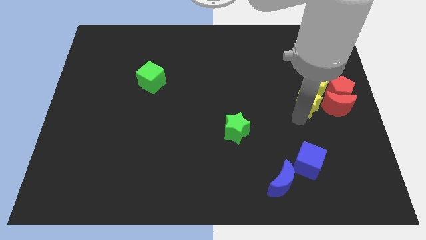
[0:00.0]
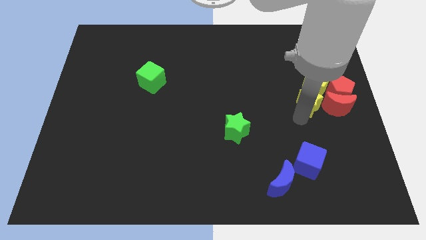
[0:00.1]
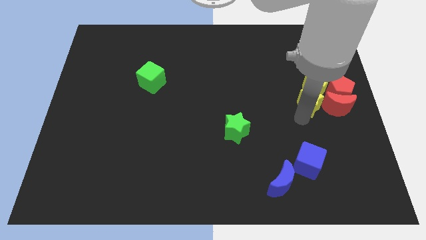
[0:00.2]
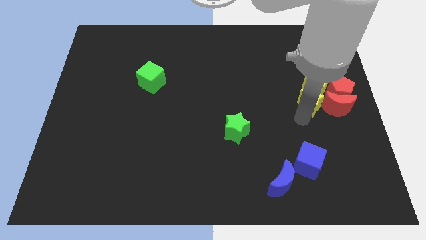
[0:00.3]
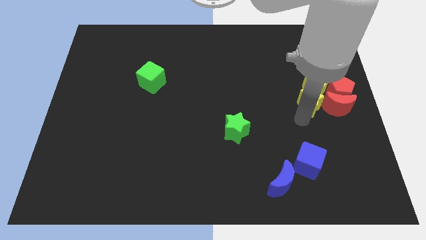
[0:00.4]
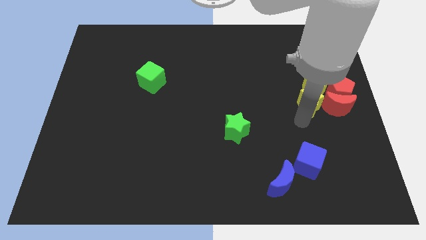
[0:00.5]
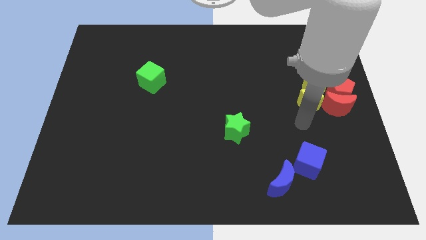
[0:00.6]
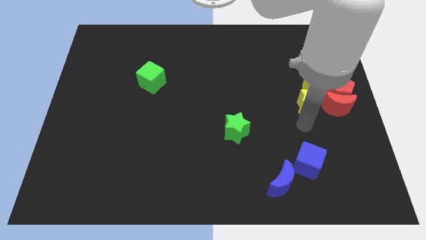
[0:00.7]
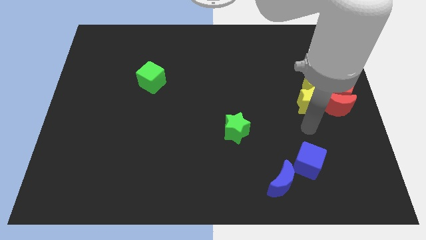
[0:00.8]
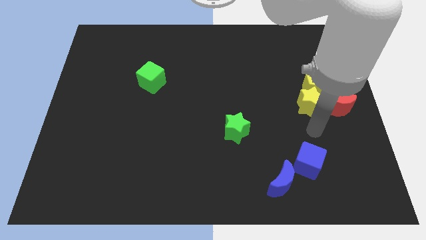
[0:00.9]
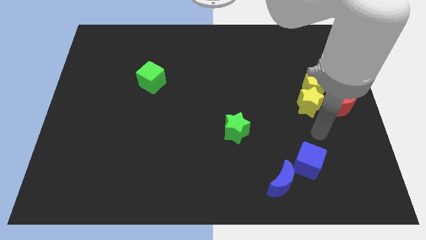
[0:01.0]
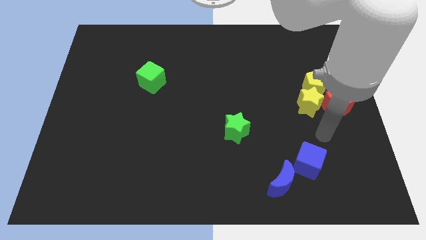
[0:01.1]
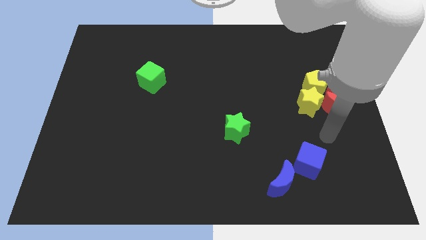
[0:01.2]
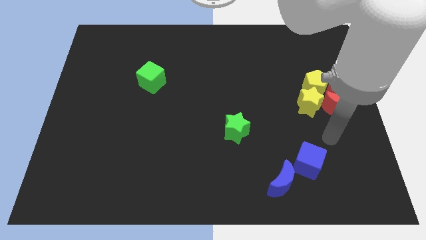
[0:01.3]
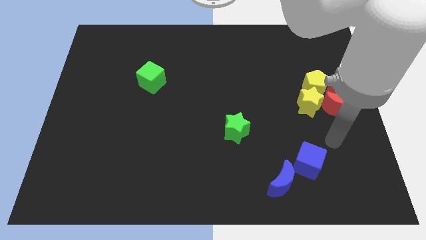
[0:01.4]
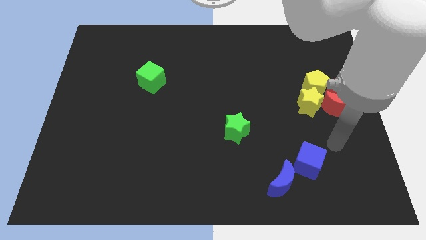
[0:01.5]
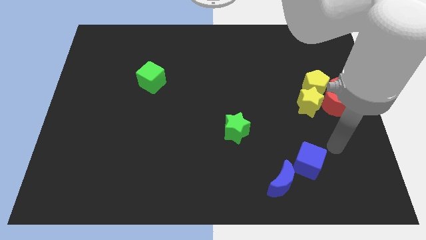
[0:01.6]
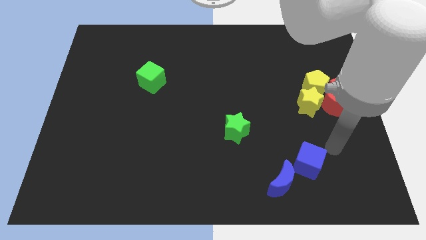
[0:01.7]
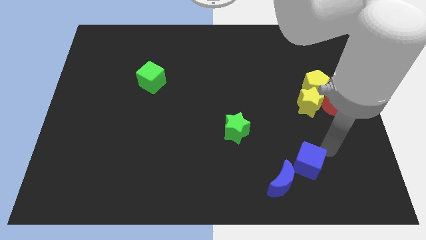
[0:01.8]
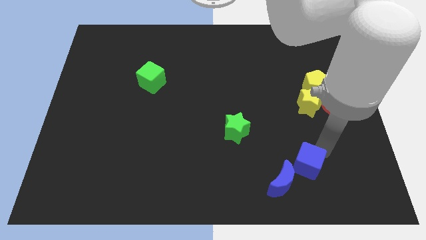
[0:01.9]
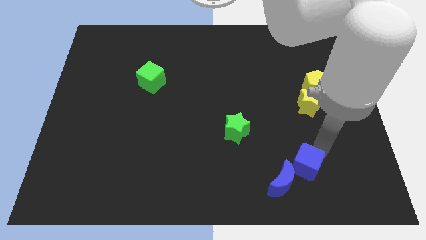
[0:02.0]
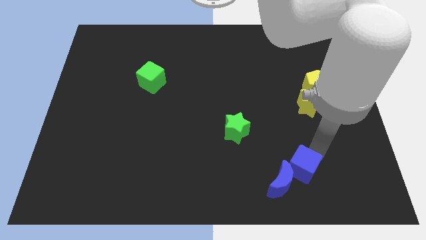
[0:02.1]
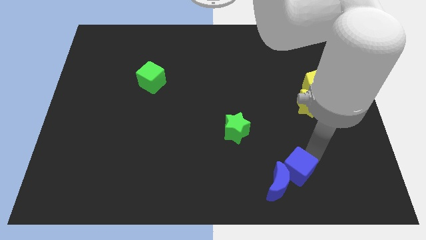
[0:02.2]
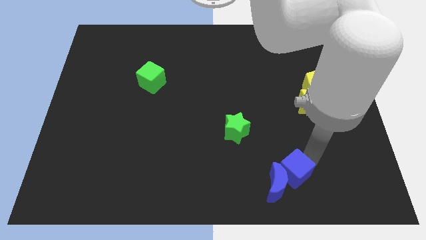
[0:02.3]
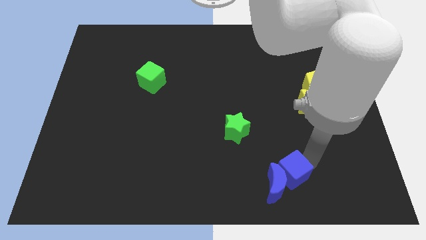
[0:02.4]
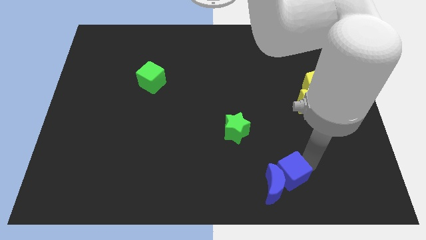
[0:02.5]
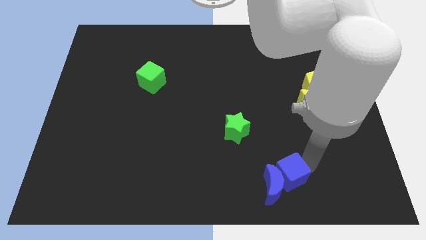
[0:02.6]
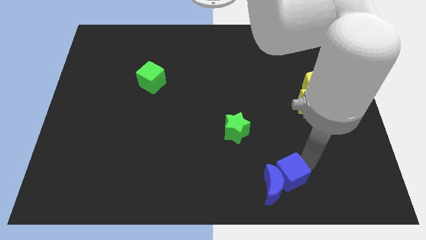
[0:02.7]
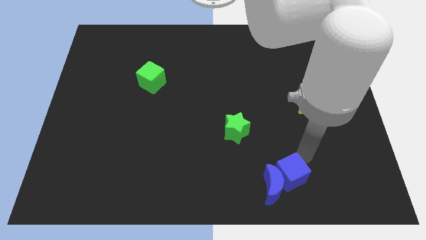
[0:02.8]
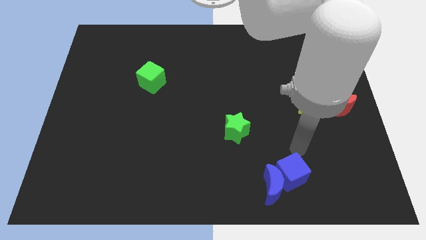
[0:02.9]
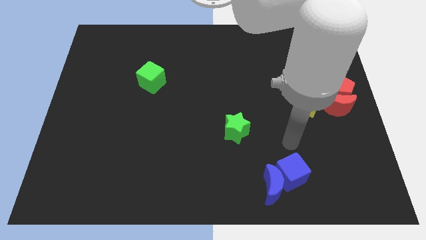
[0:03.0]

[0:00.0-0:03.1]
adjust the blue blocks

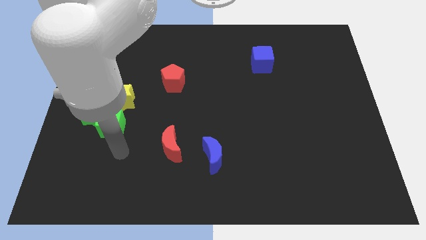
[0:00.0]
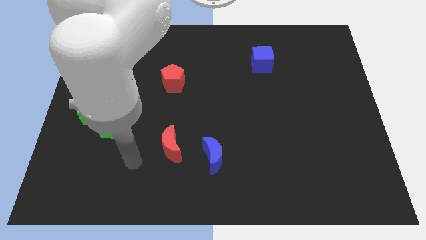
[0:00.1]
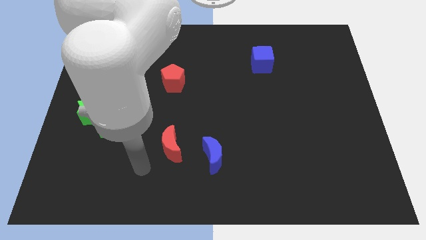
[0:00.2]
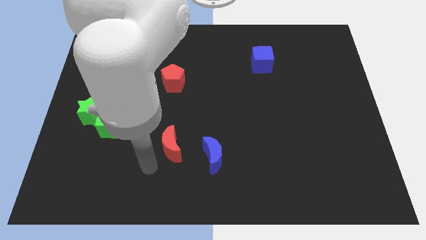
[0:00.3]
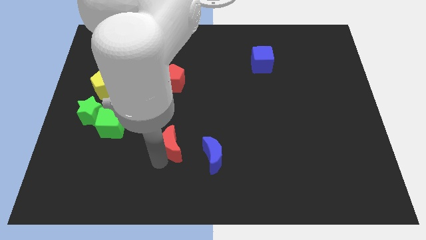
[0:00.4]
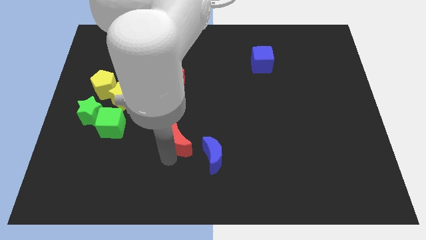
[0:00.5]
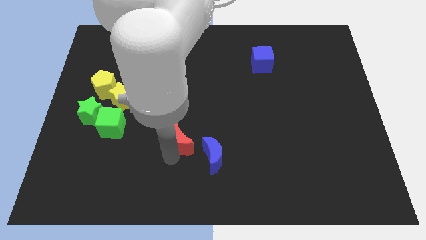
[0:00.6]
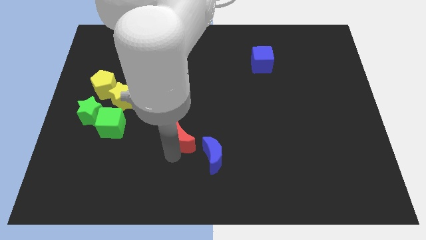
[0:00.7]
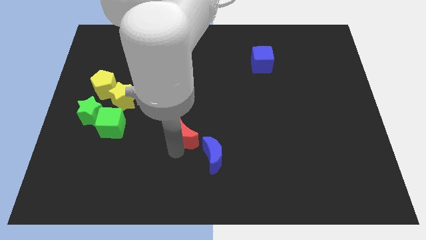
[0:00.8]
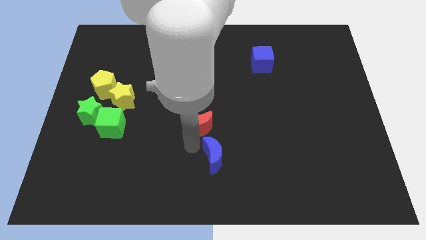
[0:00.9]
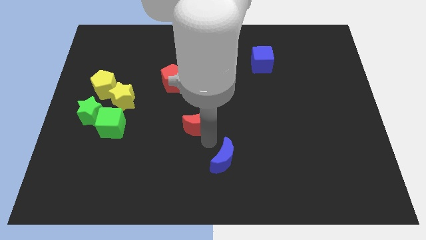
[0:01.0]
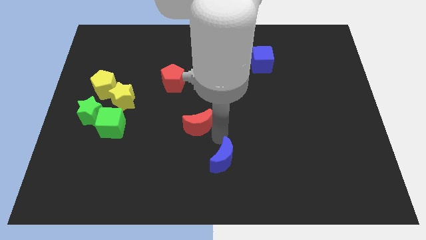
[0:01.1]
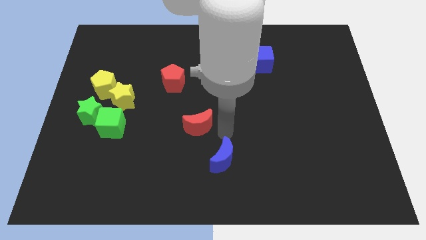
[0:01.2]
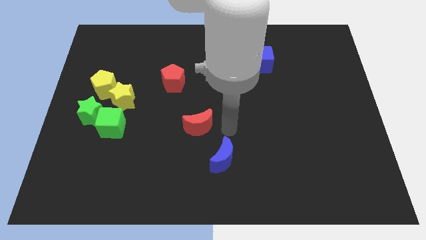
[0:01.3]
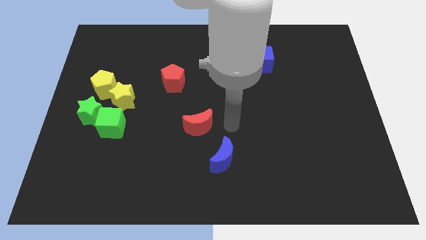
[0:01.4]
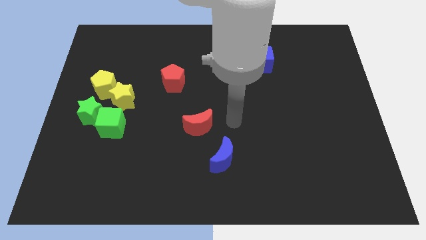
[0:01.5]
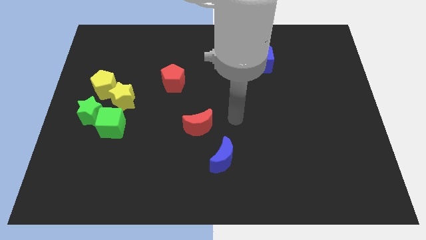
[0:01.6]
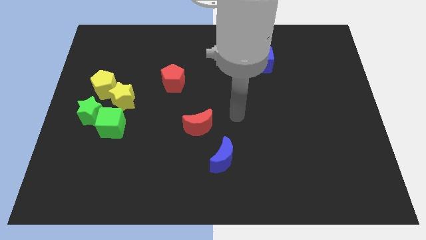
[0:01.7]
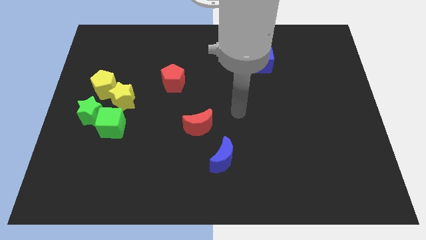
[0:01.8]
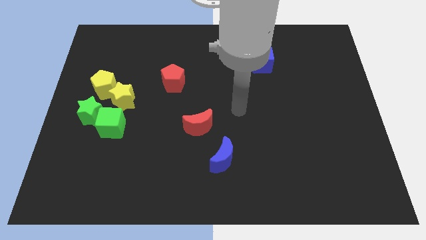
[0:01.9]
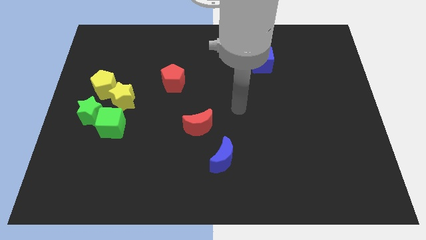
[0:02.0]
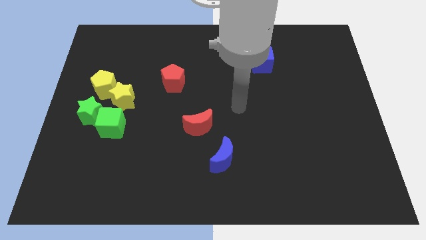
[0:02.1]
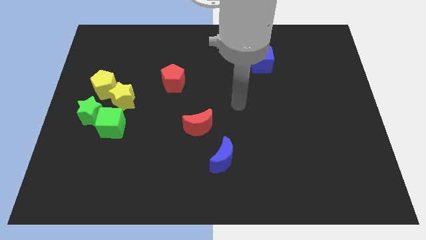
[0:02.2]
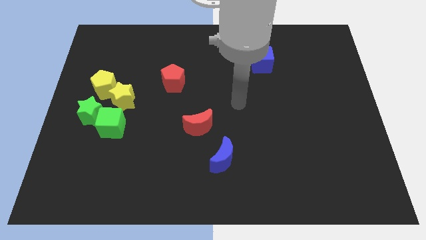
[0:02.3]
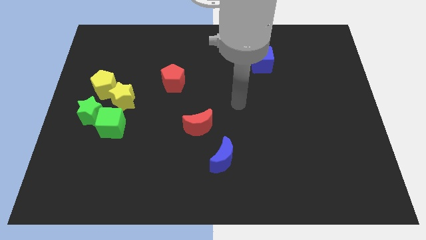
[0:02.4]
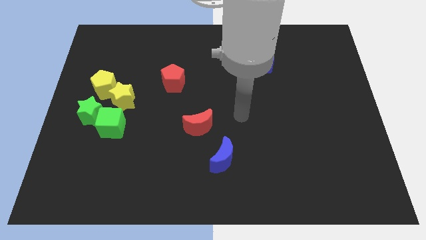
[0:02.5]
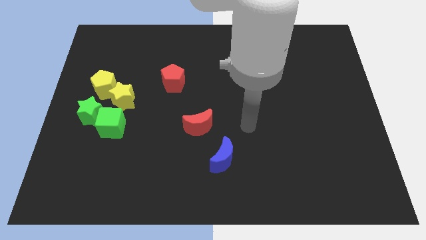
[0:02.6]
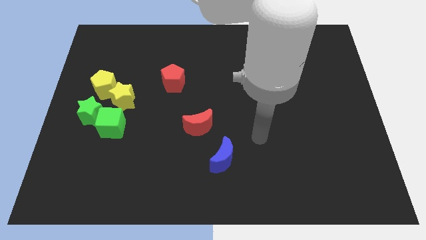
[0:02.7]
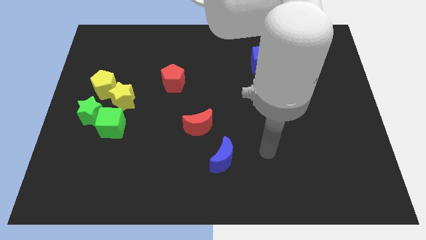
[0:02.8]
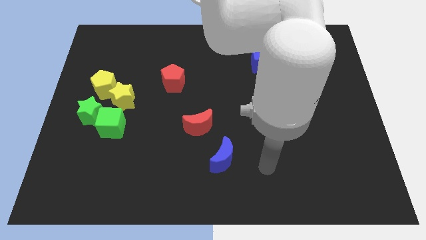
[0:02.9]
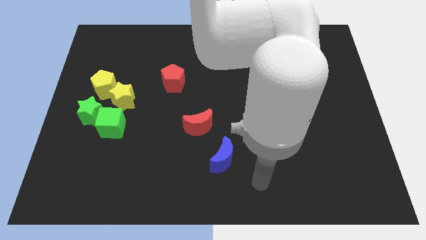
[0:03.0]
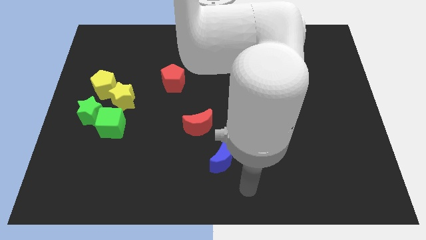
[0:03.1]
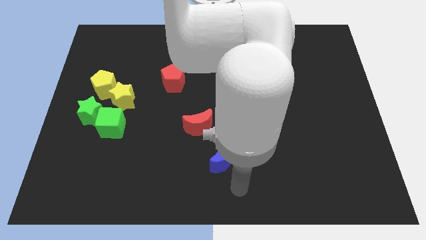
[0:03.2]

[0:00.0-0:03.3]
put the red moon diagonally top left to the blue crescent

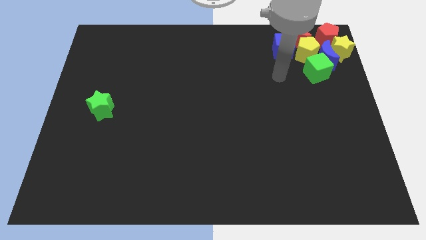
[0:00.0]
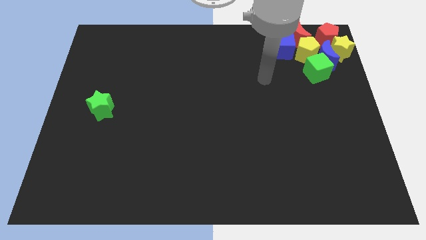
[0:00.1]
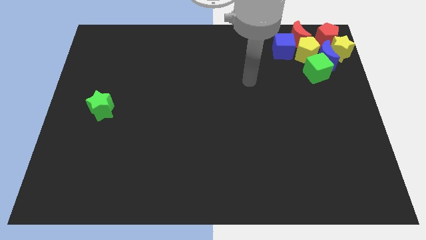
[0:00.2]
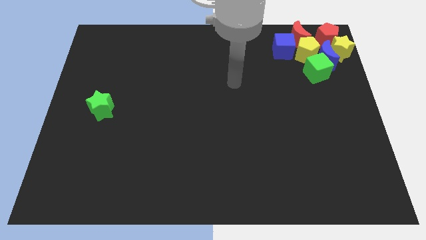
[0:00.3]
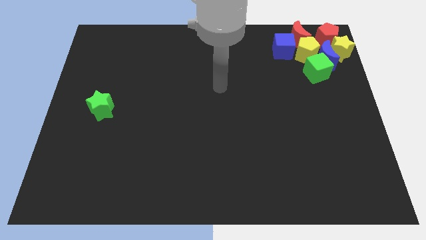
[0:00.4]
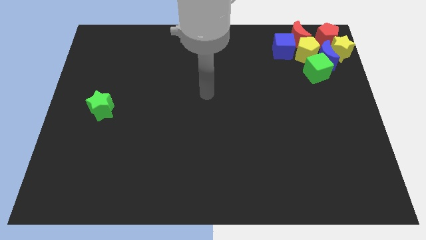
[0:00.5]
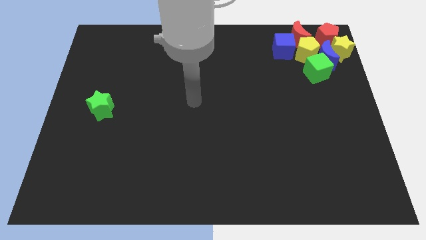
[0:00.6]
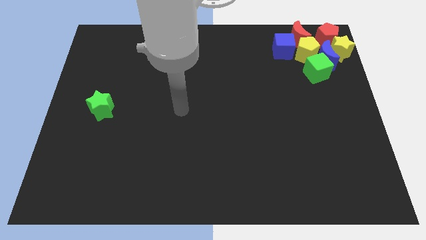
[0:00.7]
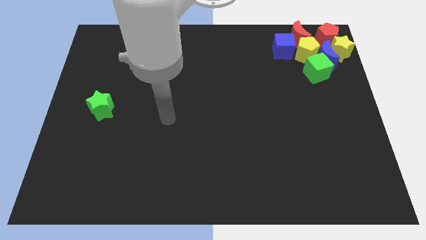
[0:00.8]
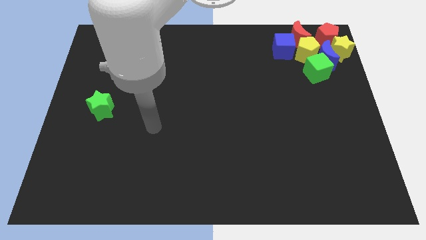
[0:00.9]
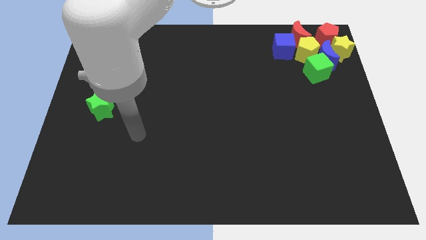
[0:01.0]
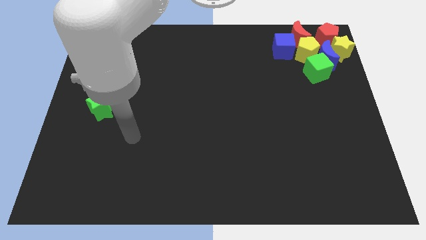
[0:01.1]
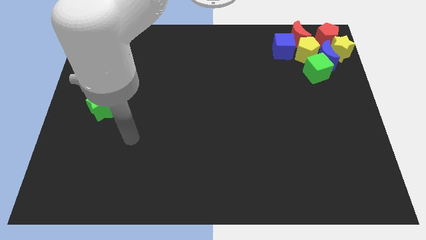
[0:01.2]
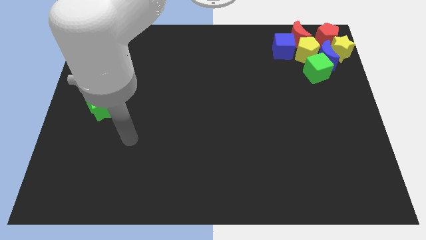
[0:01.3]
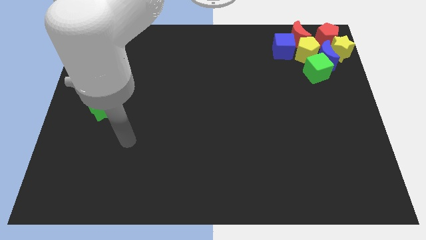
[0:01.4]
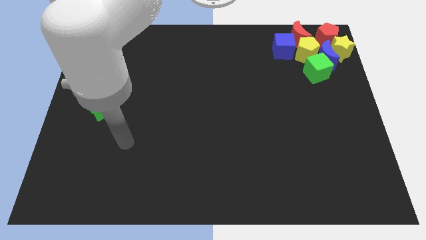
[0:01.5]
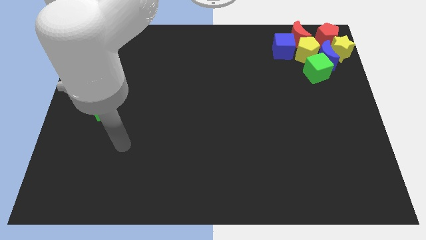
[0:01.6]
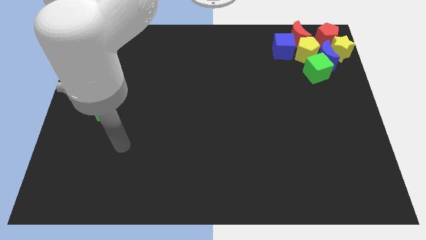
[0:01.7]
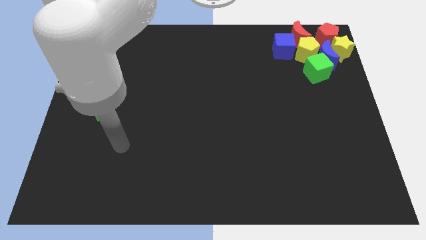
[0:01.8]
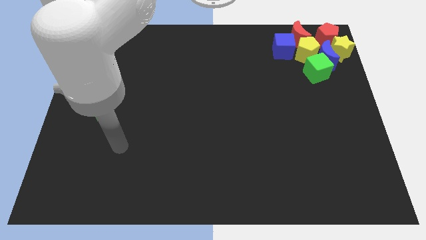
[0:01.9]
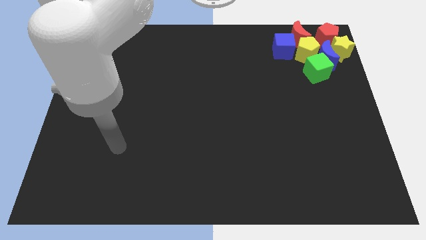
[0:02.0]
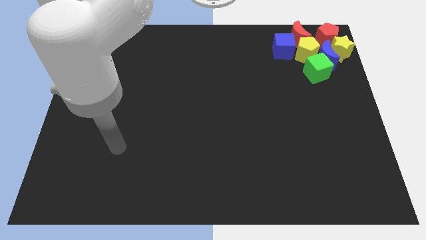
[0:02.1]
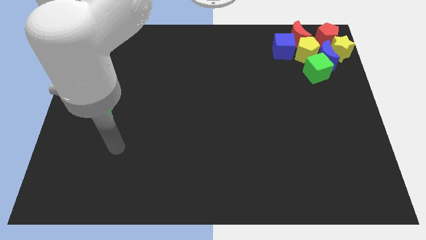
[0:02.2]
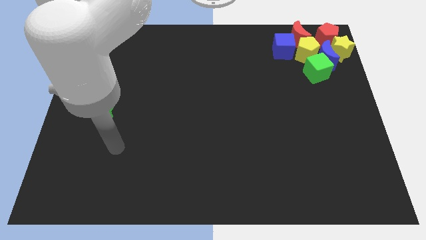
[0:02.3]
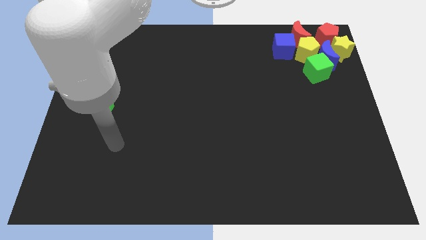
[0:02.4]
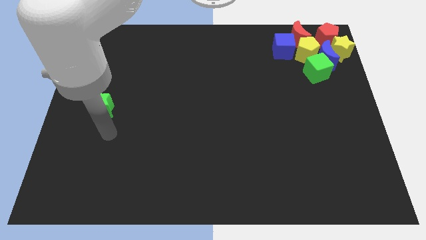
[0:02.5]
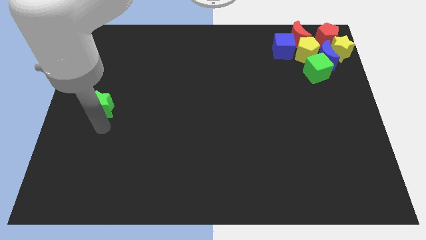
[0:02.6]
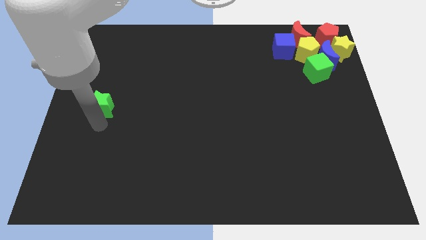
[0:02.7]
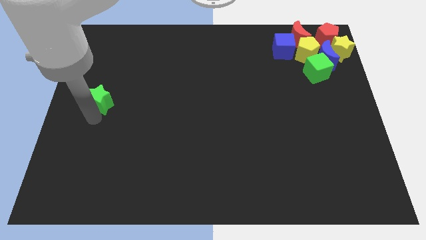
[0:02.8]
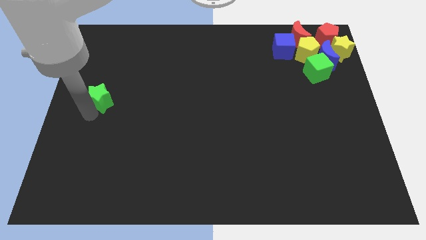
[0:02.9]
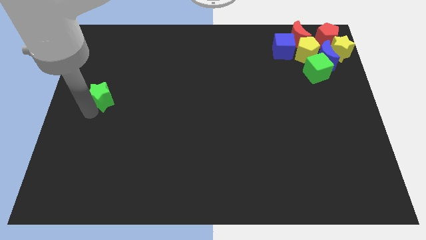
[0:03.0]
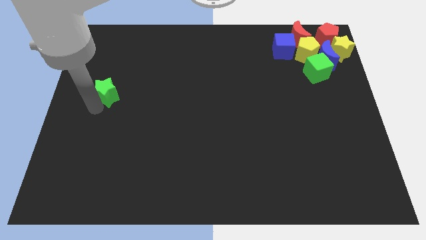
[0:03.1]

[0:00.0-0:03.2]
slightly push the green star upwards
